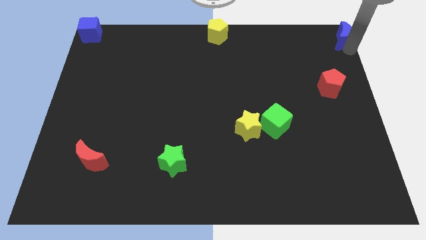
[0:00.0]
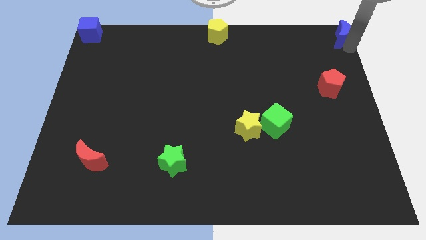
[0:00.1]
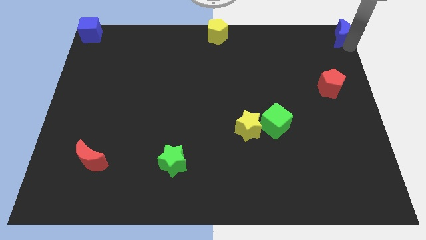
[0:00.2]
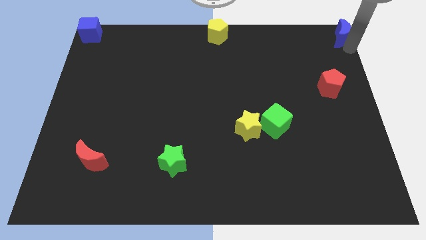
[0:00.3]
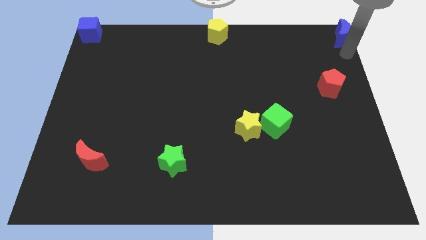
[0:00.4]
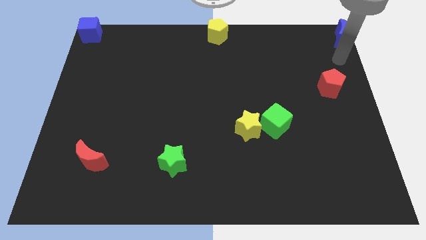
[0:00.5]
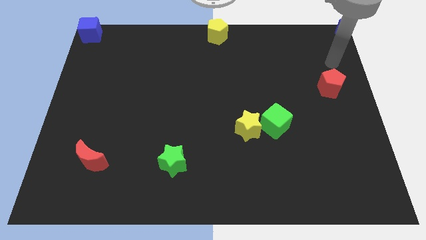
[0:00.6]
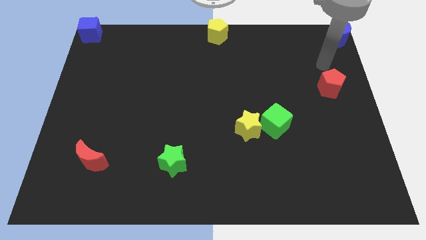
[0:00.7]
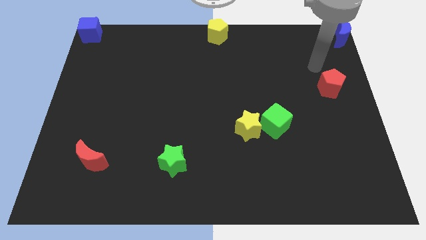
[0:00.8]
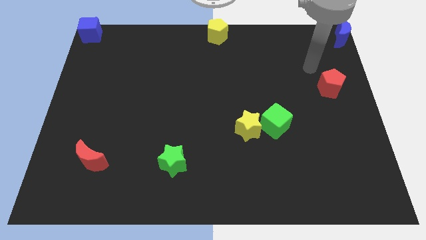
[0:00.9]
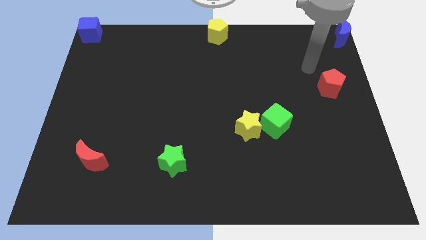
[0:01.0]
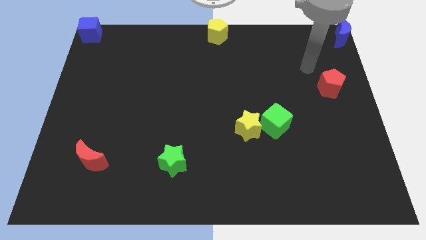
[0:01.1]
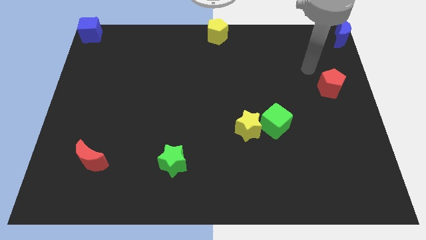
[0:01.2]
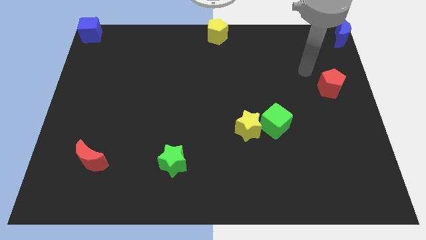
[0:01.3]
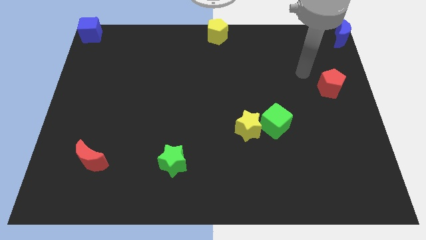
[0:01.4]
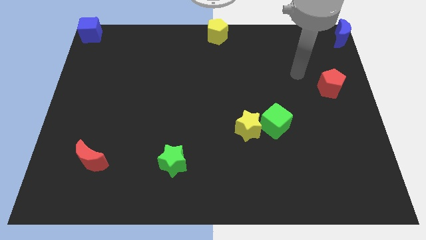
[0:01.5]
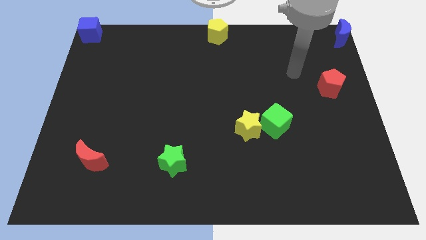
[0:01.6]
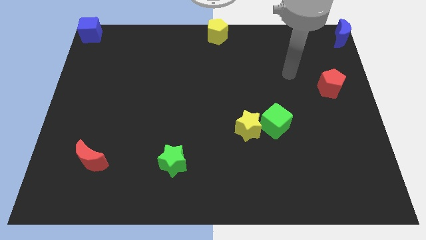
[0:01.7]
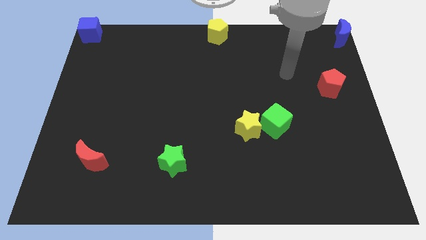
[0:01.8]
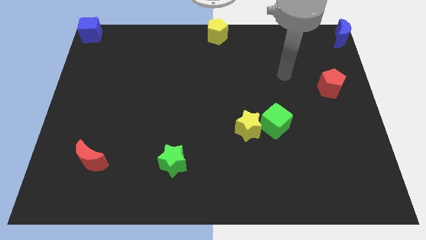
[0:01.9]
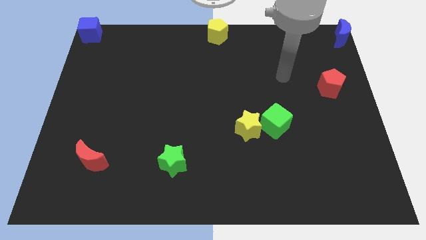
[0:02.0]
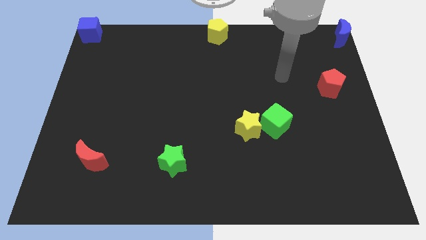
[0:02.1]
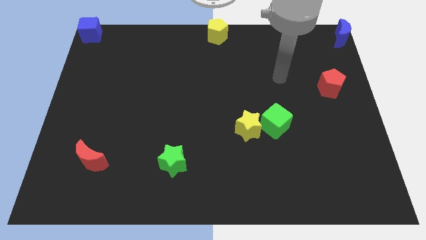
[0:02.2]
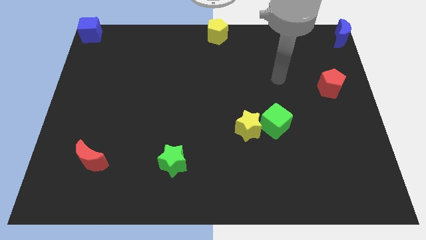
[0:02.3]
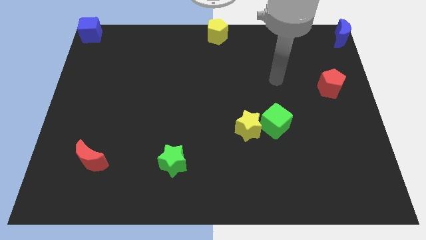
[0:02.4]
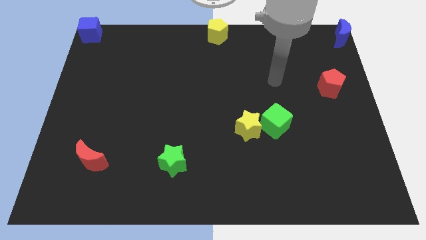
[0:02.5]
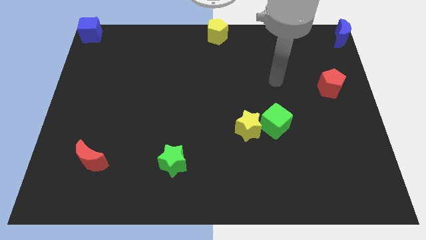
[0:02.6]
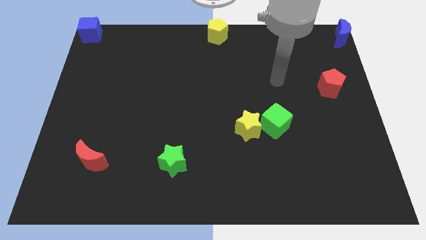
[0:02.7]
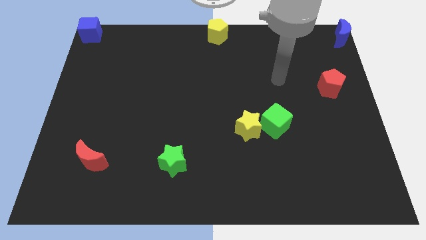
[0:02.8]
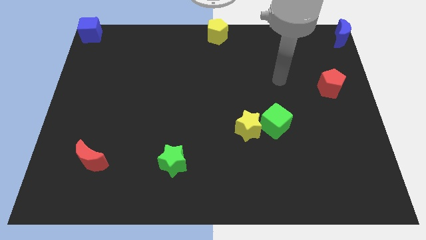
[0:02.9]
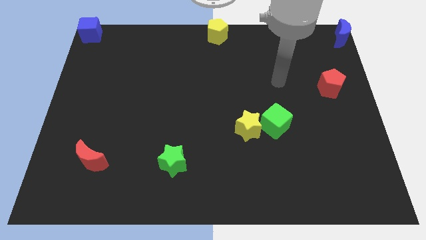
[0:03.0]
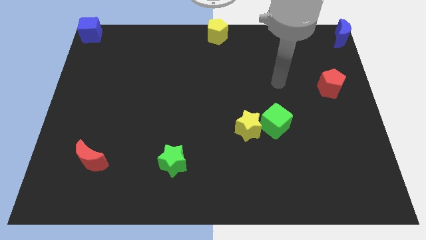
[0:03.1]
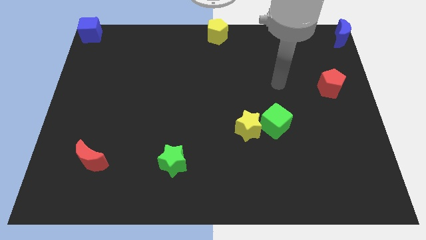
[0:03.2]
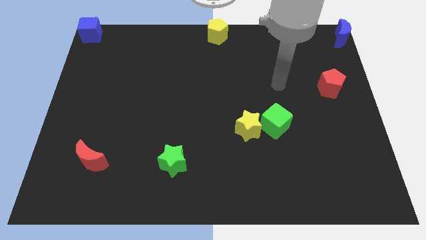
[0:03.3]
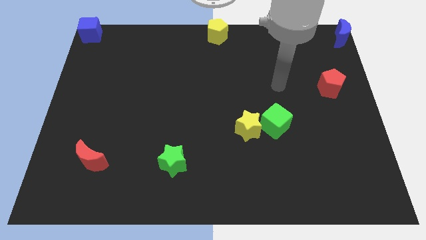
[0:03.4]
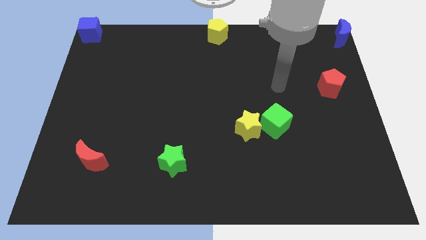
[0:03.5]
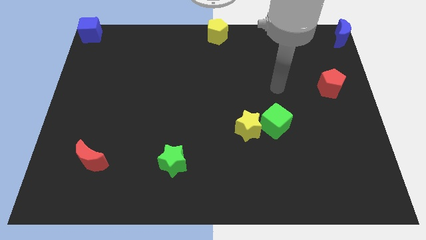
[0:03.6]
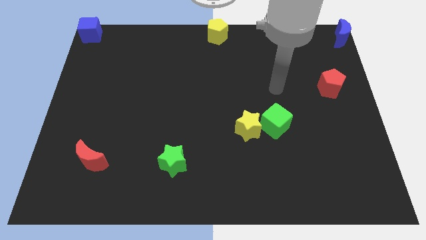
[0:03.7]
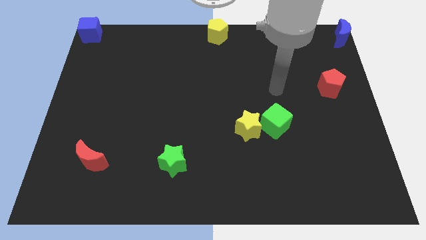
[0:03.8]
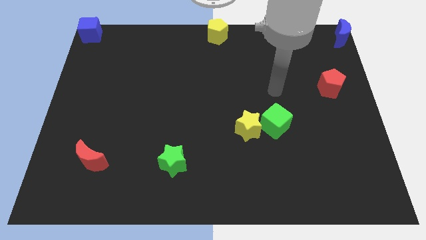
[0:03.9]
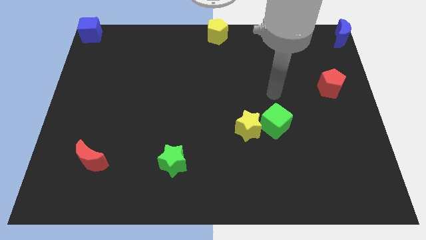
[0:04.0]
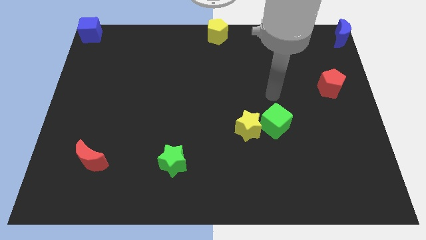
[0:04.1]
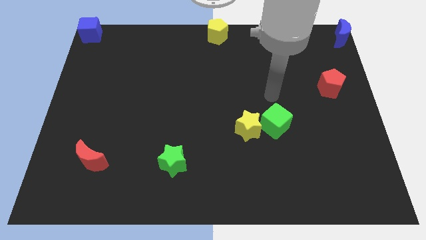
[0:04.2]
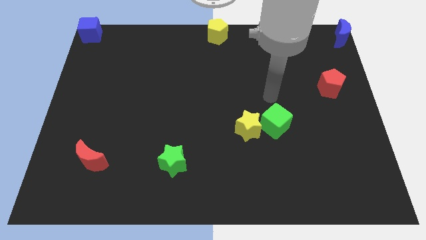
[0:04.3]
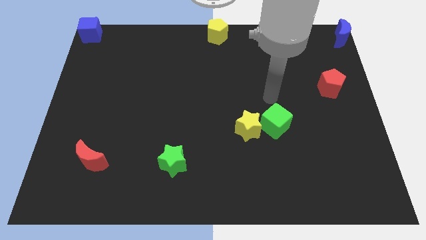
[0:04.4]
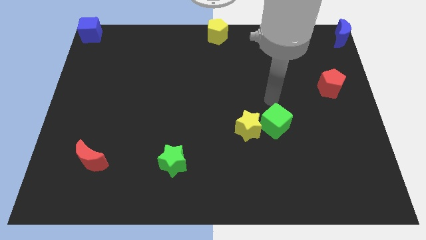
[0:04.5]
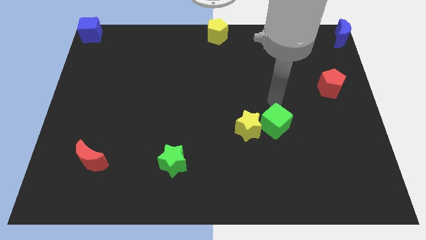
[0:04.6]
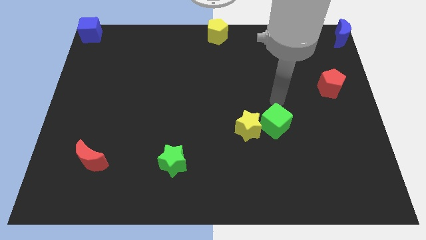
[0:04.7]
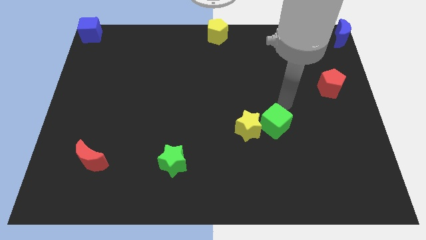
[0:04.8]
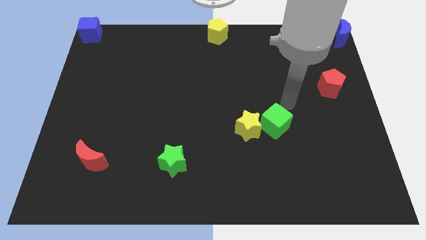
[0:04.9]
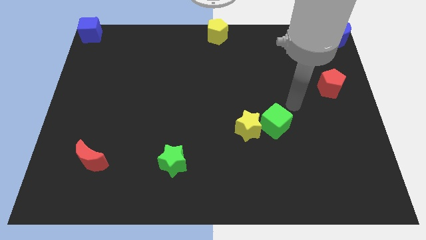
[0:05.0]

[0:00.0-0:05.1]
move your arm away from the blue moon

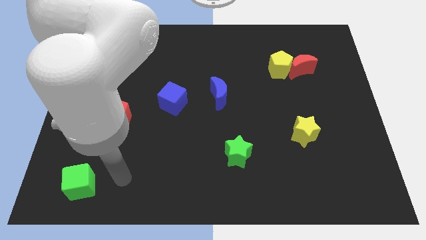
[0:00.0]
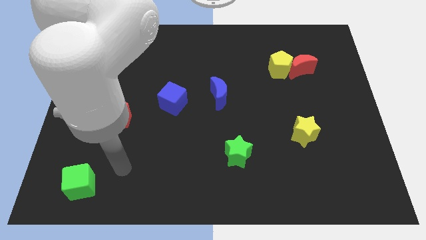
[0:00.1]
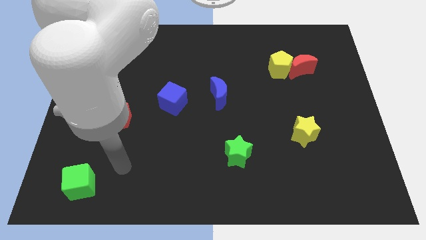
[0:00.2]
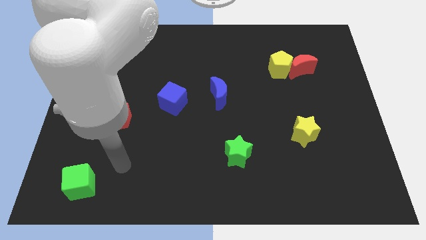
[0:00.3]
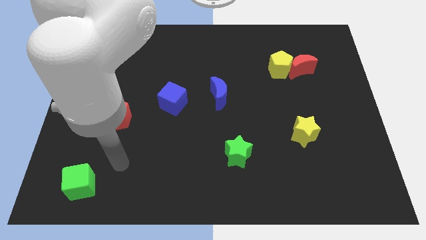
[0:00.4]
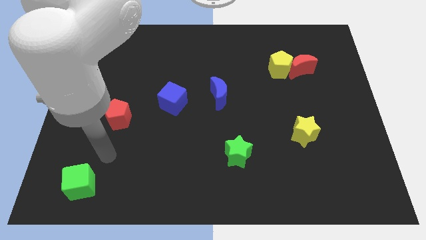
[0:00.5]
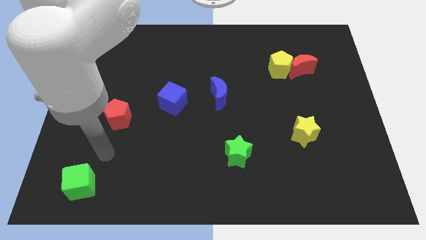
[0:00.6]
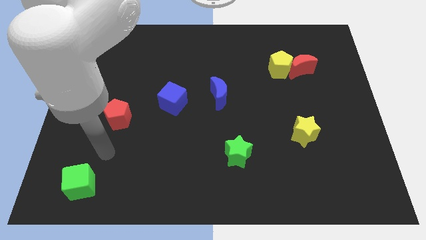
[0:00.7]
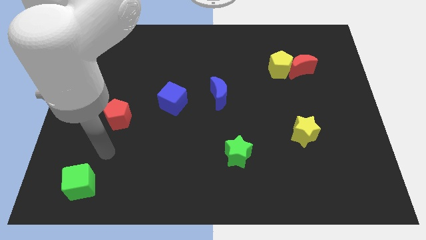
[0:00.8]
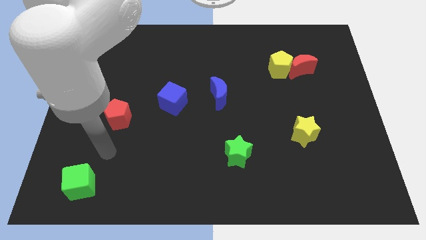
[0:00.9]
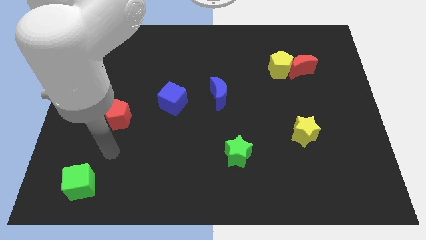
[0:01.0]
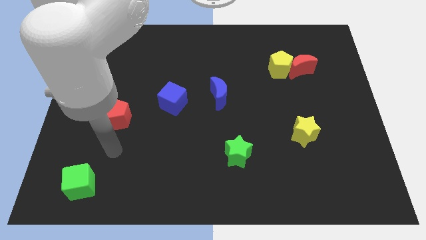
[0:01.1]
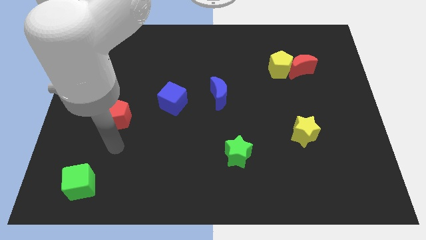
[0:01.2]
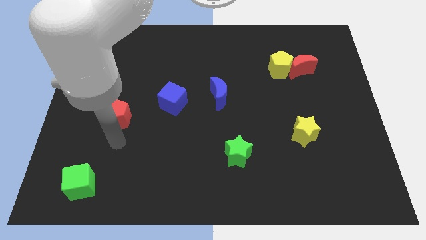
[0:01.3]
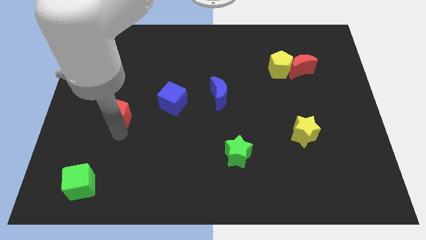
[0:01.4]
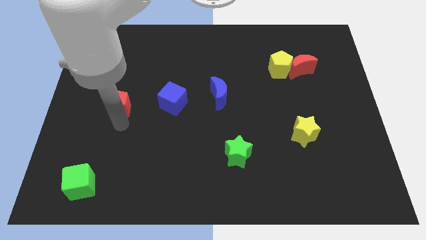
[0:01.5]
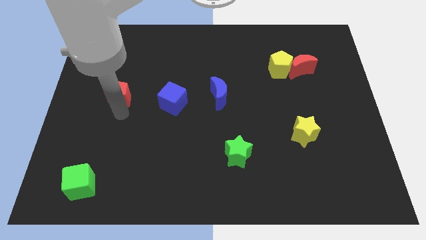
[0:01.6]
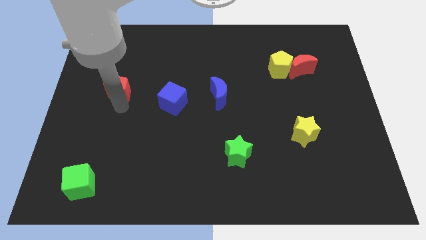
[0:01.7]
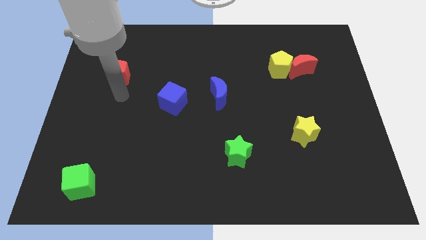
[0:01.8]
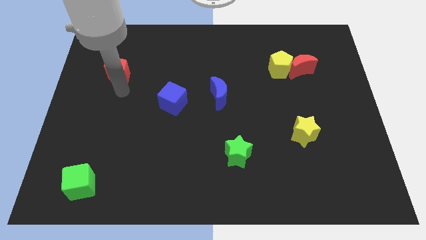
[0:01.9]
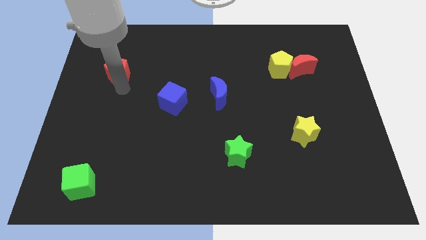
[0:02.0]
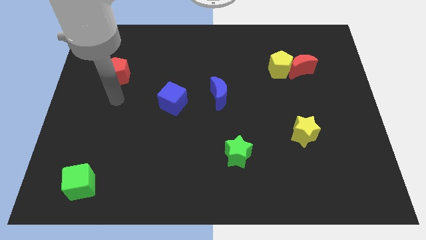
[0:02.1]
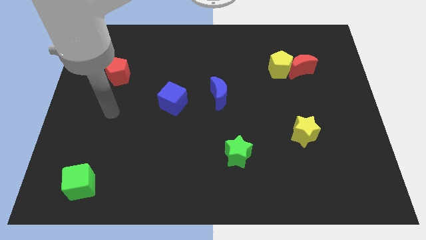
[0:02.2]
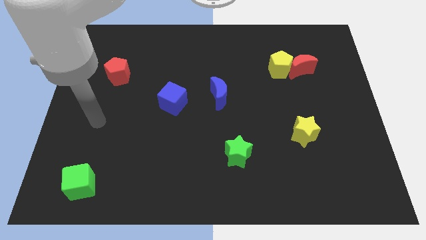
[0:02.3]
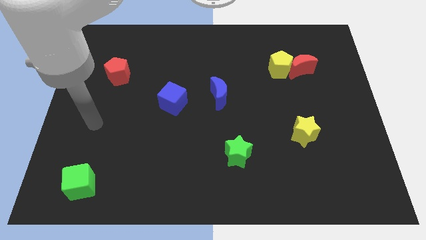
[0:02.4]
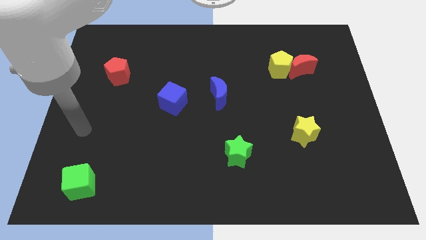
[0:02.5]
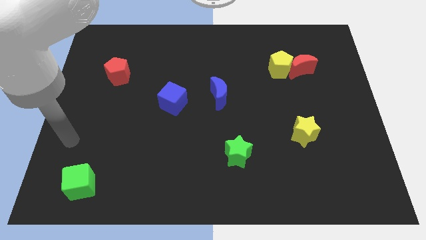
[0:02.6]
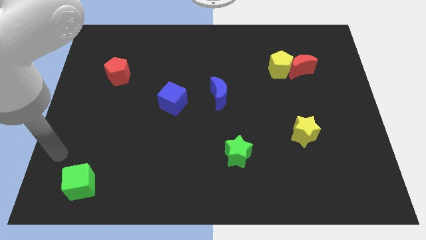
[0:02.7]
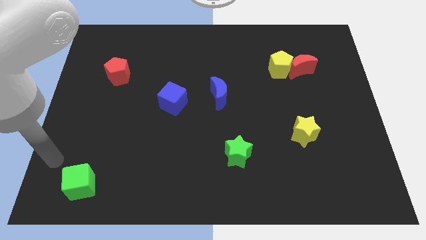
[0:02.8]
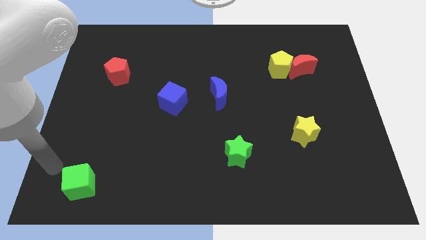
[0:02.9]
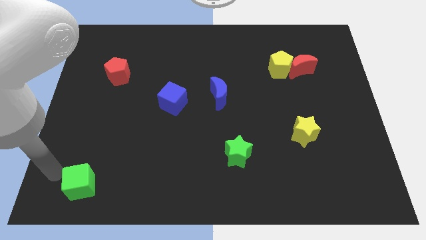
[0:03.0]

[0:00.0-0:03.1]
push the red crescent to the top left of the blue cube

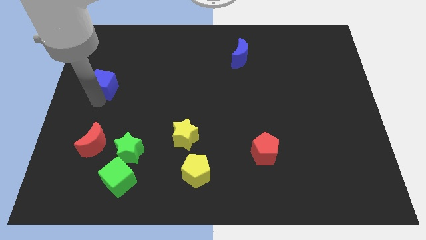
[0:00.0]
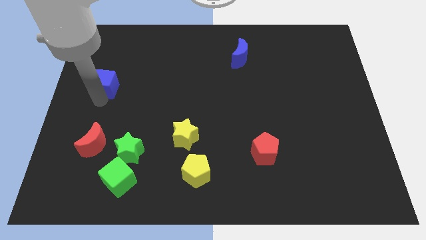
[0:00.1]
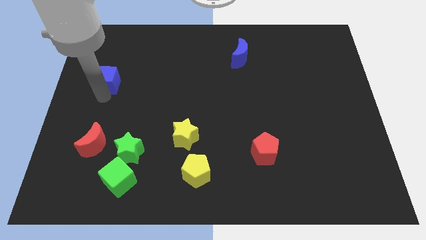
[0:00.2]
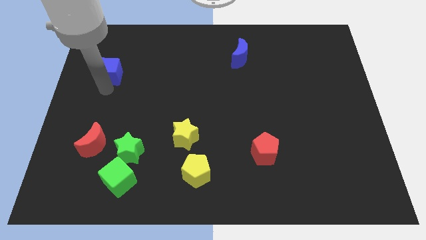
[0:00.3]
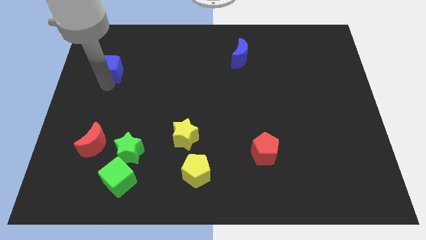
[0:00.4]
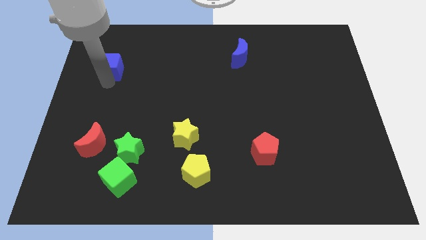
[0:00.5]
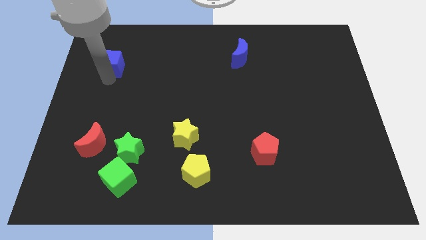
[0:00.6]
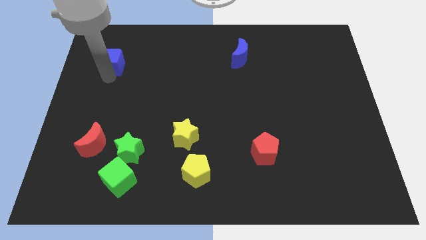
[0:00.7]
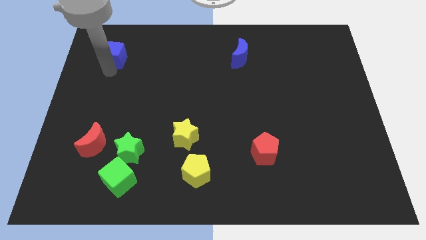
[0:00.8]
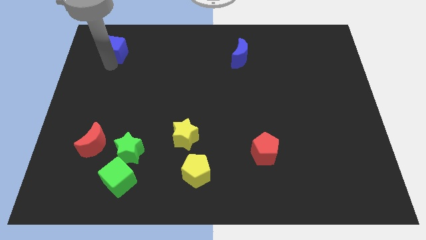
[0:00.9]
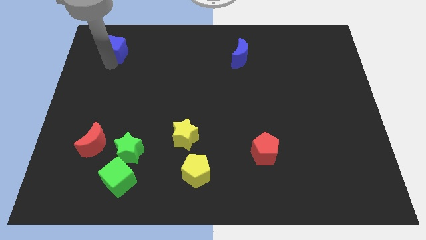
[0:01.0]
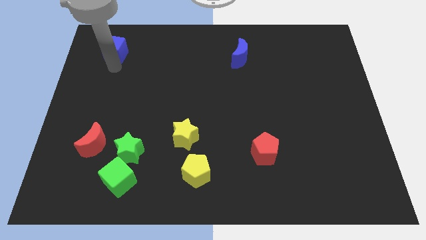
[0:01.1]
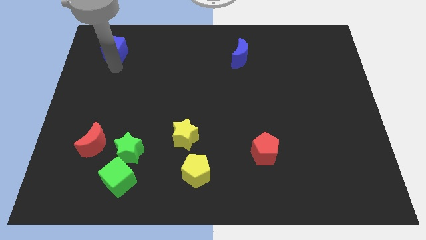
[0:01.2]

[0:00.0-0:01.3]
move the blue cube to the left of the blue crescent
